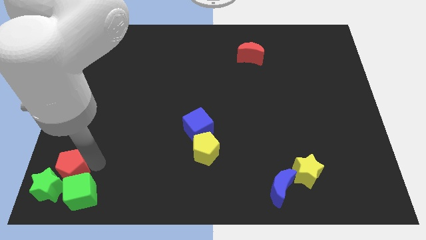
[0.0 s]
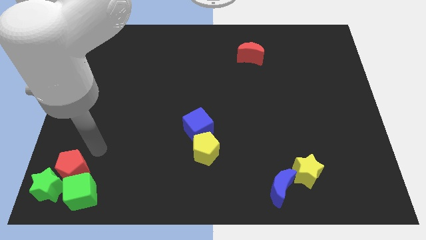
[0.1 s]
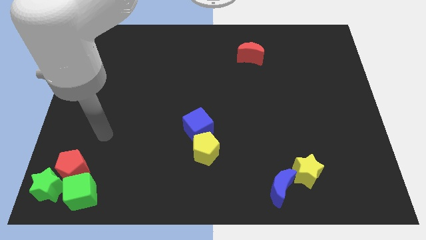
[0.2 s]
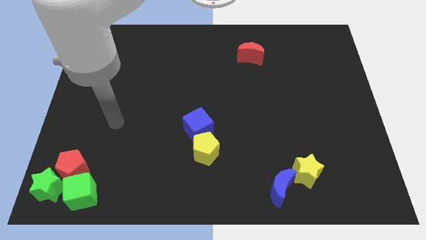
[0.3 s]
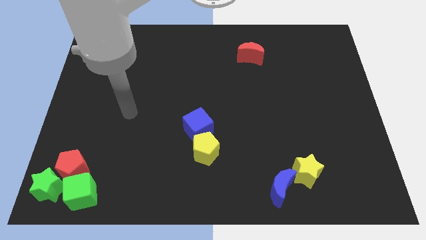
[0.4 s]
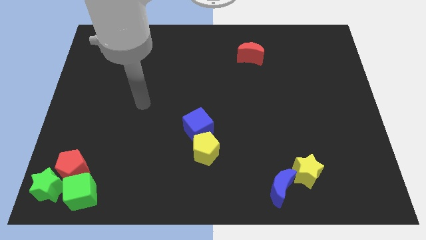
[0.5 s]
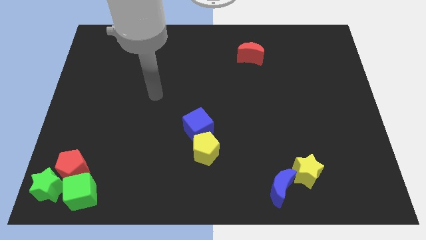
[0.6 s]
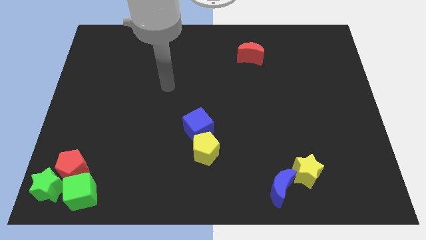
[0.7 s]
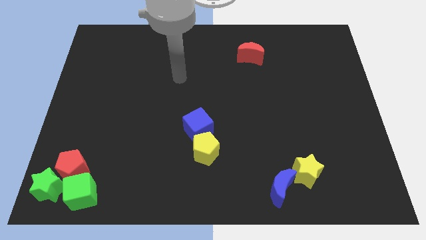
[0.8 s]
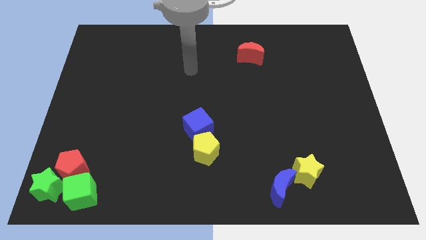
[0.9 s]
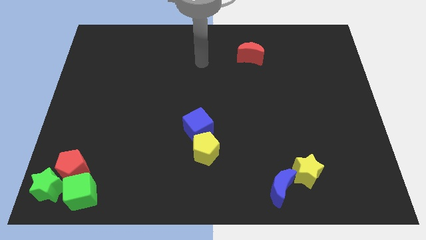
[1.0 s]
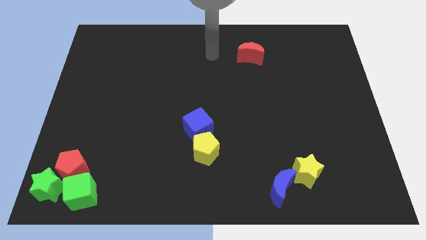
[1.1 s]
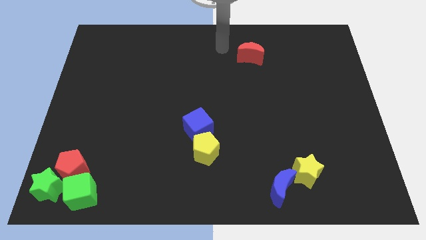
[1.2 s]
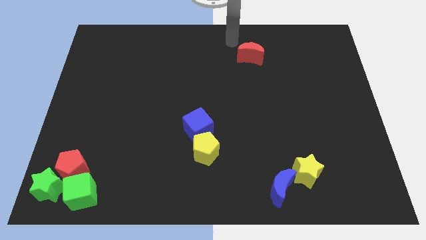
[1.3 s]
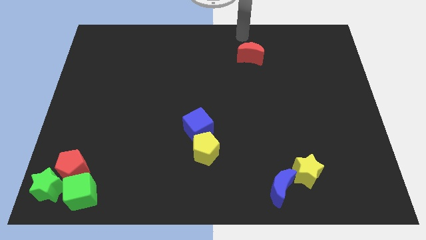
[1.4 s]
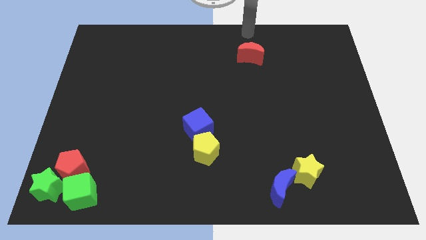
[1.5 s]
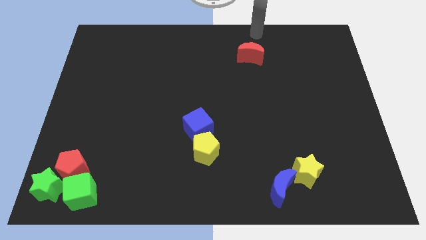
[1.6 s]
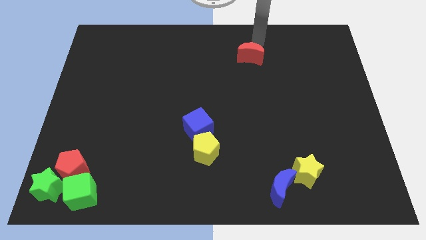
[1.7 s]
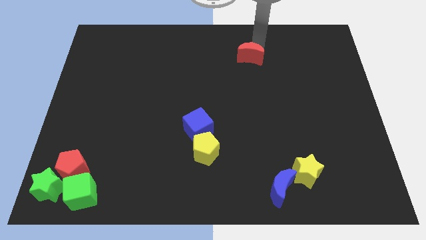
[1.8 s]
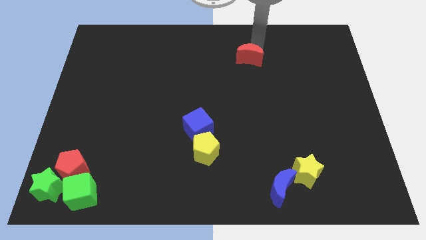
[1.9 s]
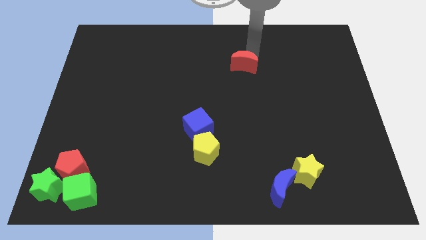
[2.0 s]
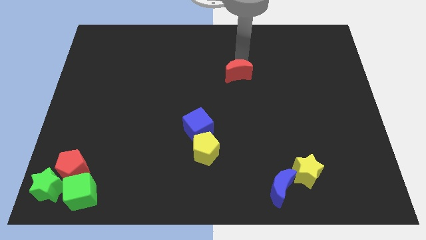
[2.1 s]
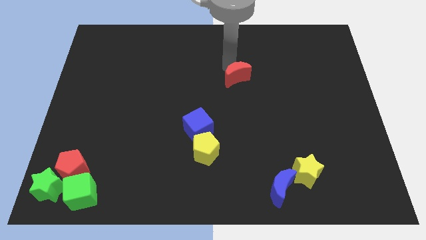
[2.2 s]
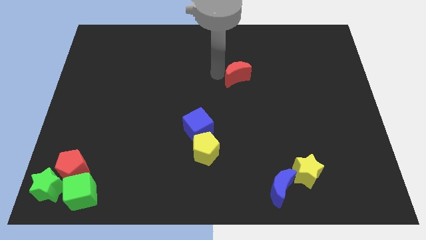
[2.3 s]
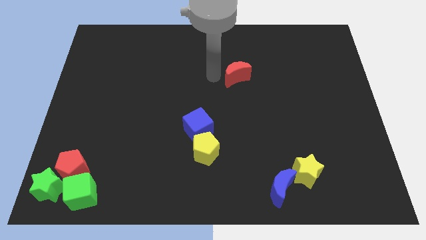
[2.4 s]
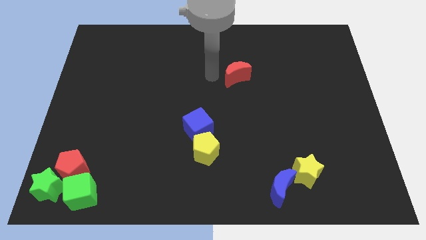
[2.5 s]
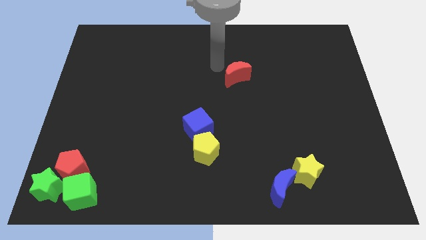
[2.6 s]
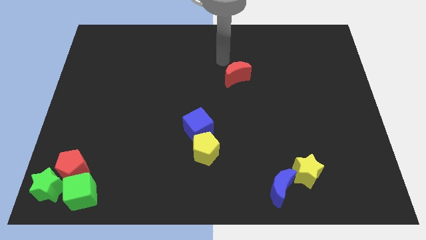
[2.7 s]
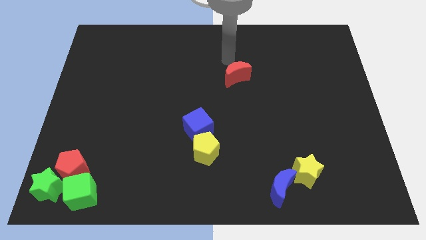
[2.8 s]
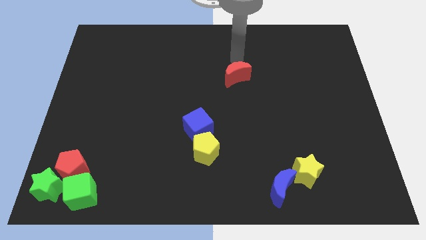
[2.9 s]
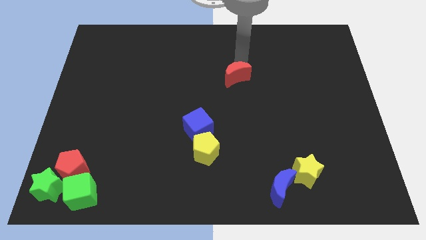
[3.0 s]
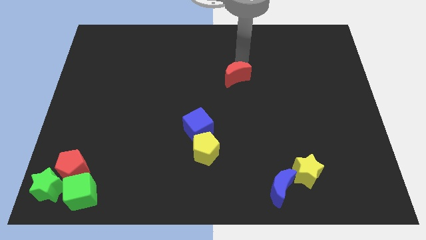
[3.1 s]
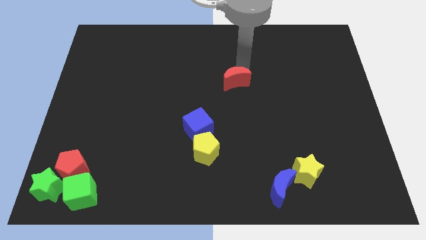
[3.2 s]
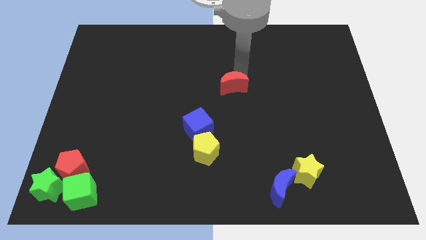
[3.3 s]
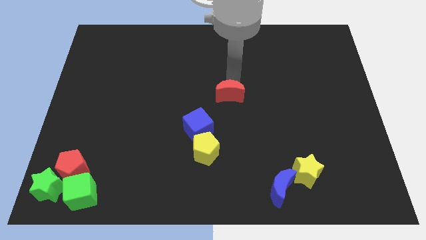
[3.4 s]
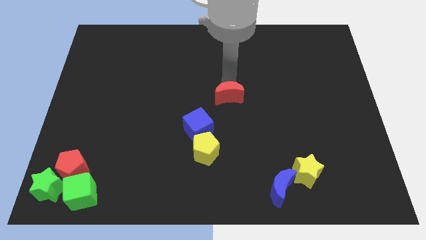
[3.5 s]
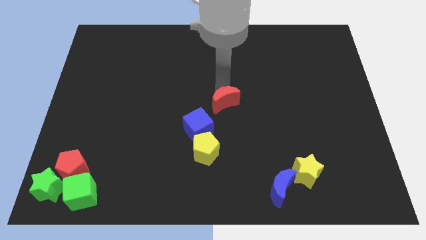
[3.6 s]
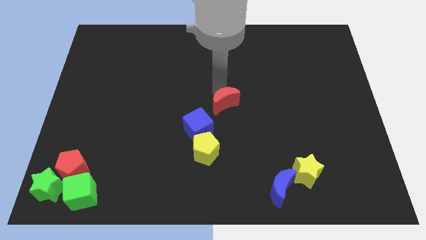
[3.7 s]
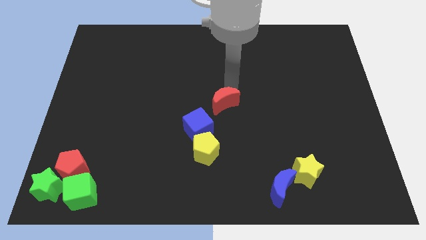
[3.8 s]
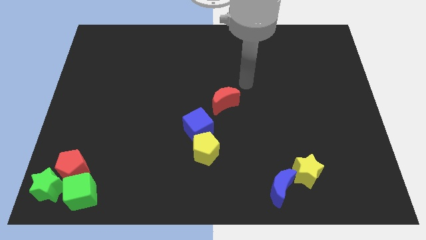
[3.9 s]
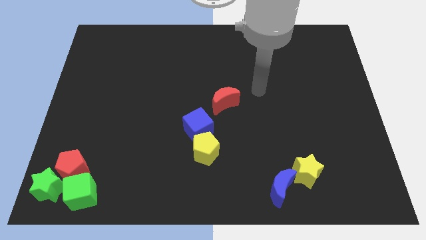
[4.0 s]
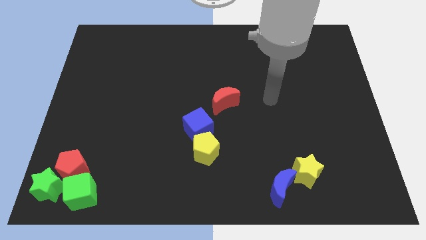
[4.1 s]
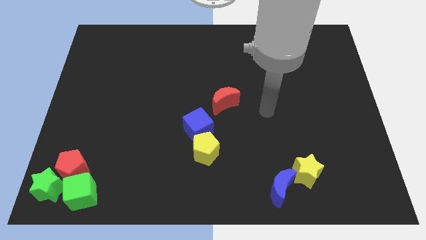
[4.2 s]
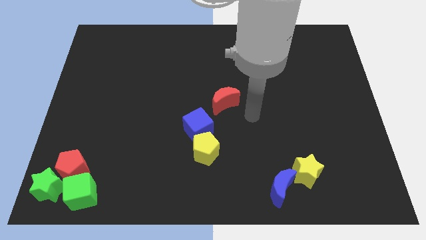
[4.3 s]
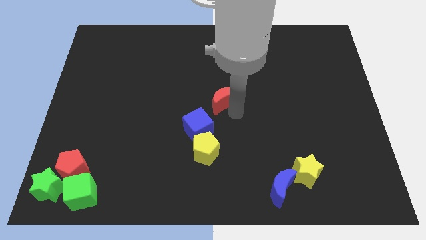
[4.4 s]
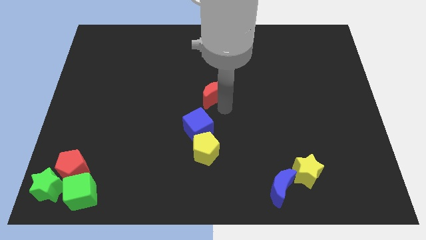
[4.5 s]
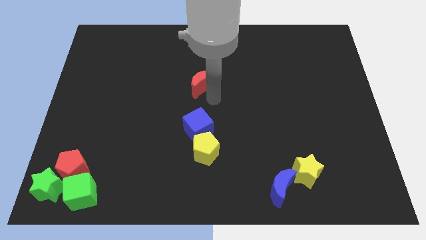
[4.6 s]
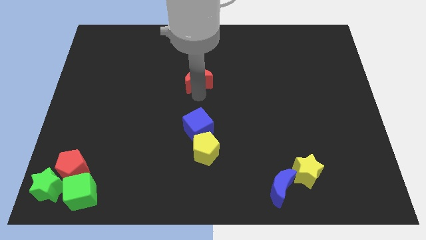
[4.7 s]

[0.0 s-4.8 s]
move the red crescent to the center of the board

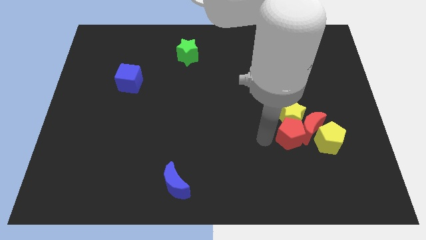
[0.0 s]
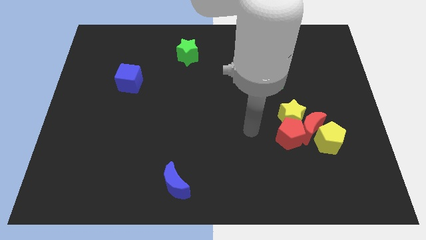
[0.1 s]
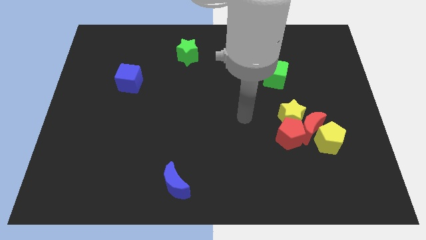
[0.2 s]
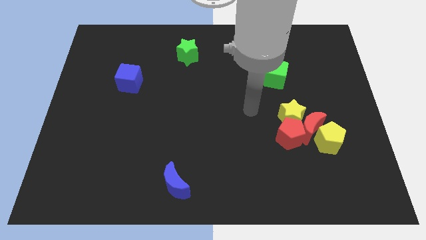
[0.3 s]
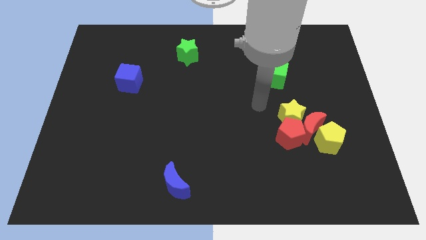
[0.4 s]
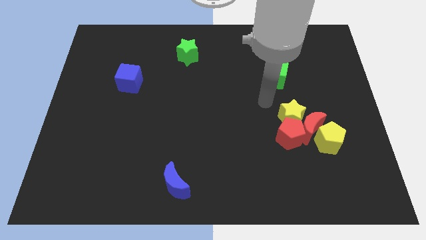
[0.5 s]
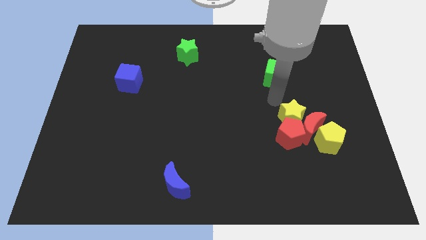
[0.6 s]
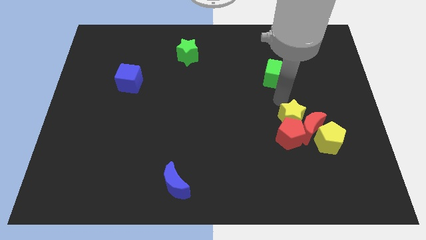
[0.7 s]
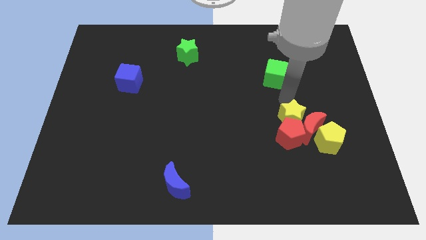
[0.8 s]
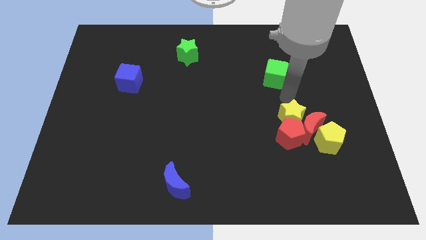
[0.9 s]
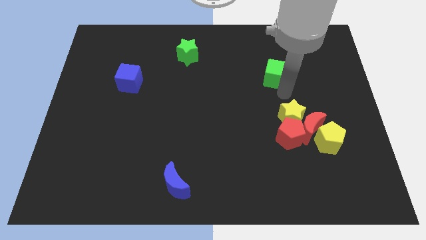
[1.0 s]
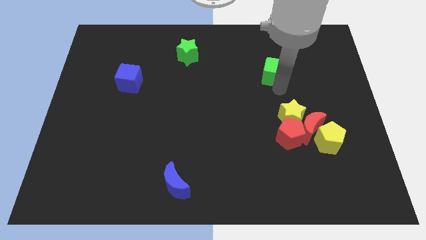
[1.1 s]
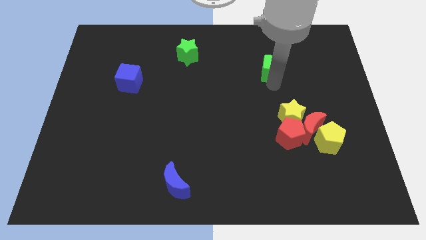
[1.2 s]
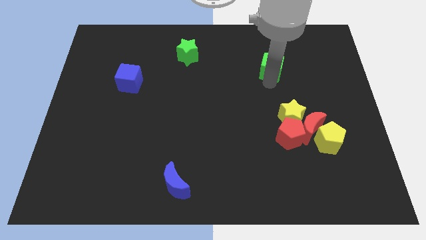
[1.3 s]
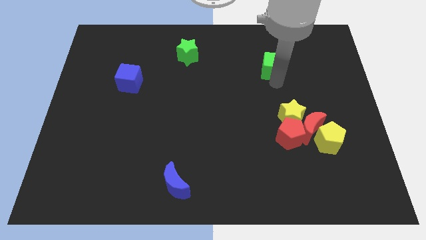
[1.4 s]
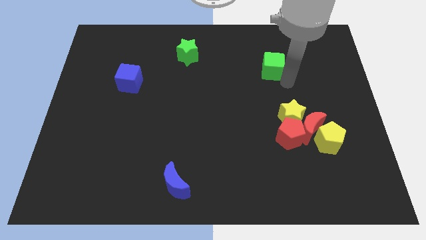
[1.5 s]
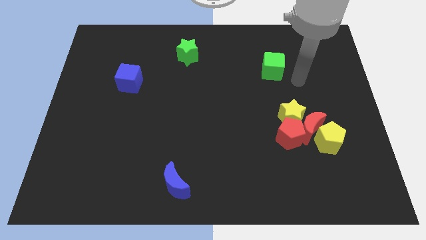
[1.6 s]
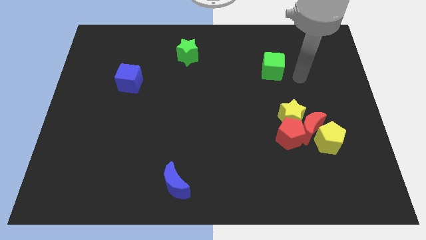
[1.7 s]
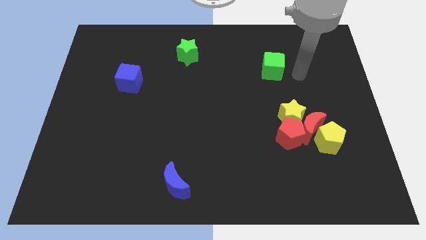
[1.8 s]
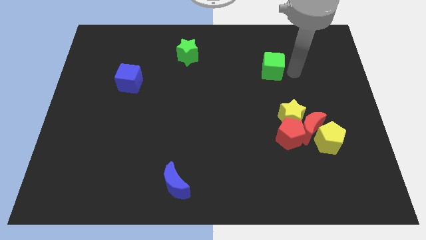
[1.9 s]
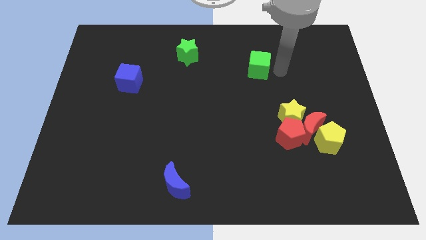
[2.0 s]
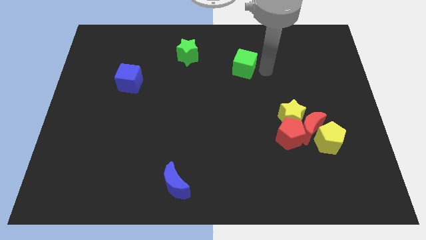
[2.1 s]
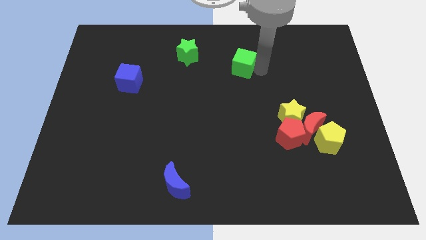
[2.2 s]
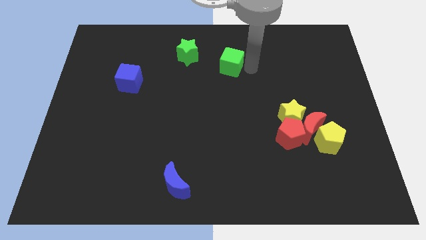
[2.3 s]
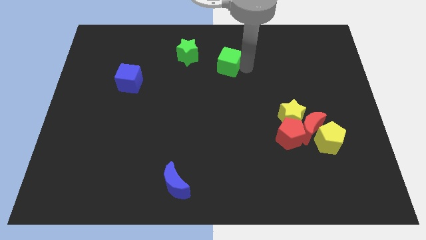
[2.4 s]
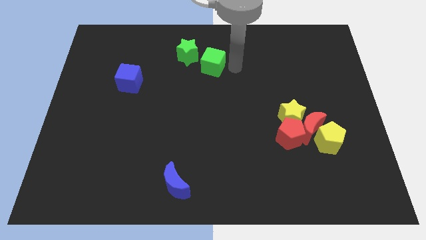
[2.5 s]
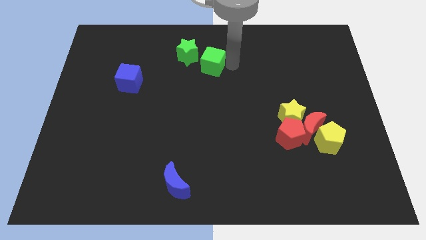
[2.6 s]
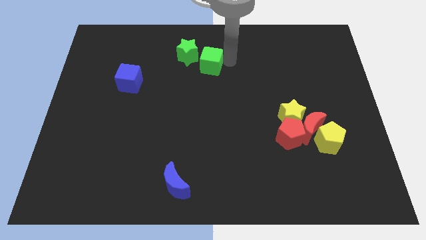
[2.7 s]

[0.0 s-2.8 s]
push the green cube towards the green star

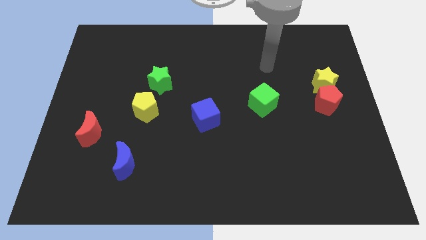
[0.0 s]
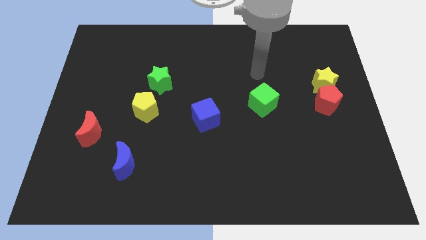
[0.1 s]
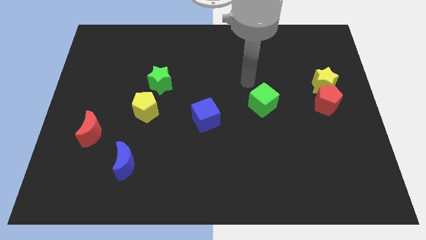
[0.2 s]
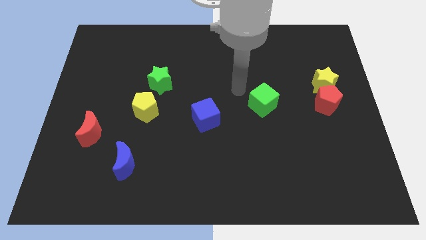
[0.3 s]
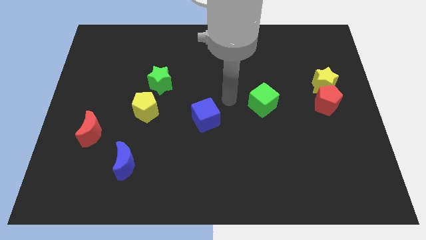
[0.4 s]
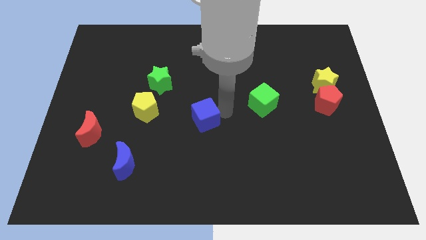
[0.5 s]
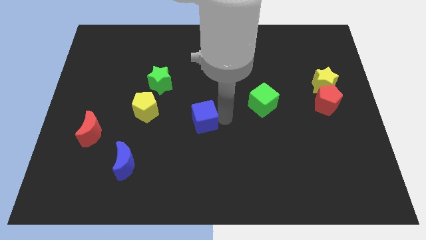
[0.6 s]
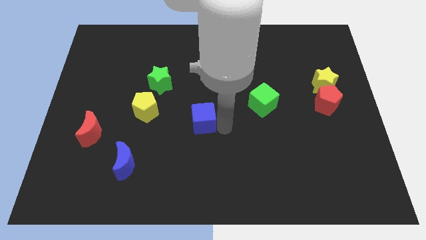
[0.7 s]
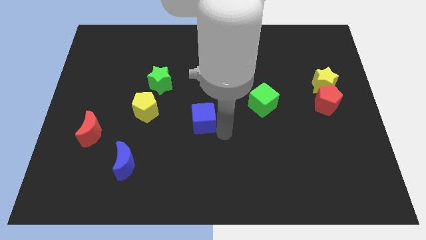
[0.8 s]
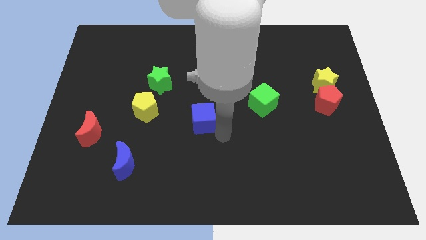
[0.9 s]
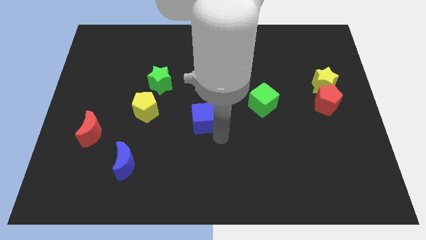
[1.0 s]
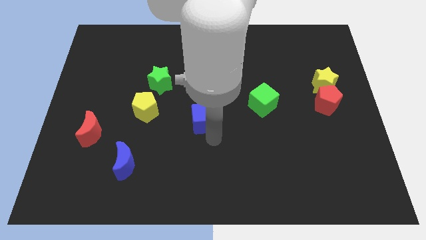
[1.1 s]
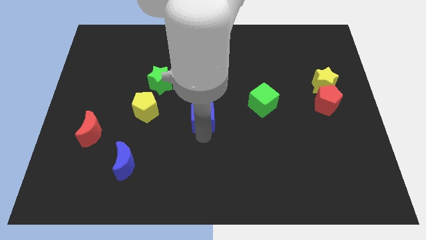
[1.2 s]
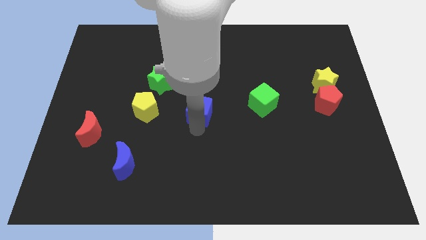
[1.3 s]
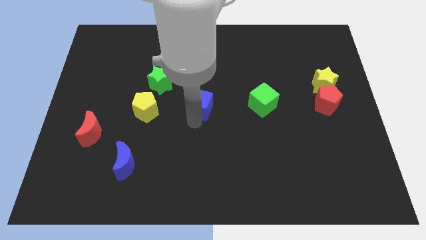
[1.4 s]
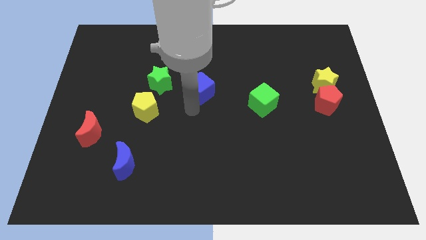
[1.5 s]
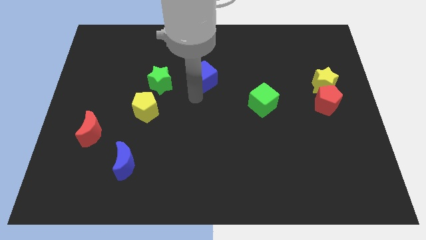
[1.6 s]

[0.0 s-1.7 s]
move the blue cube right to the green star
